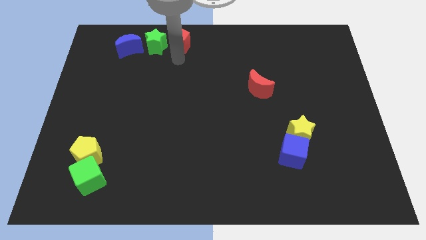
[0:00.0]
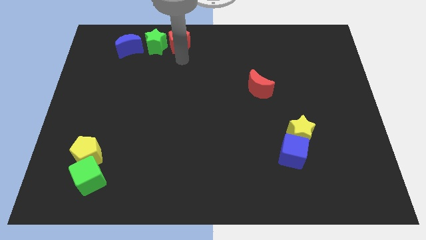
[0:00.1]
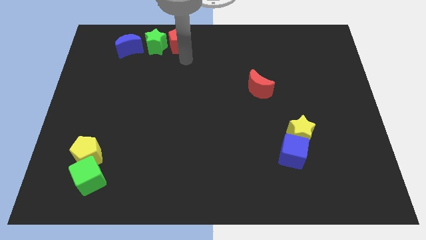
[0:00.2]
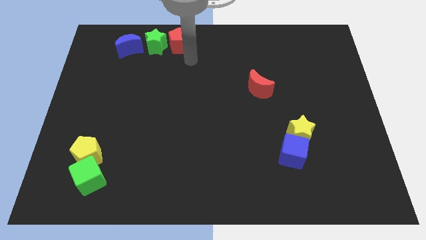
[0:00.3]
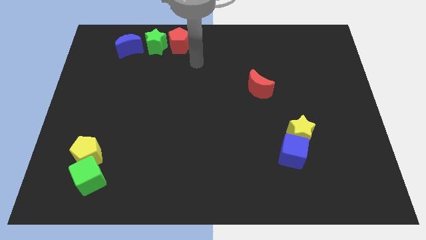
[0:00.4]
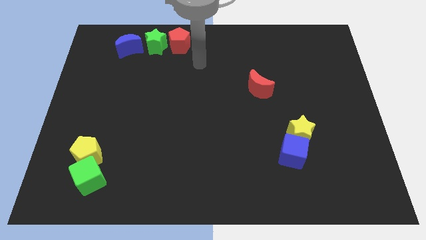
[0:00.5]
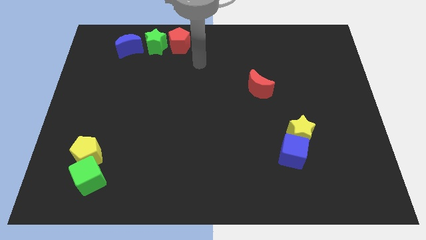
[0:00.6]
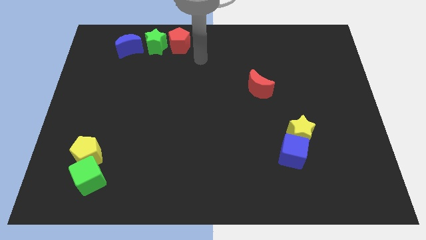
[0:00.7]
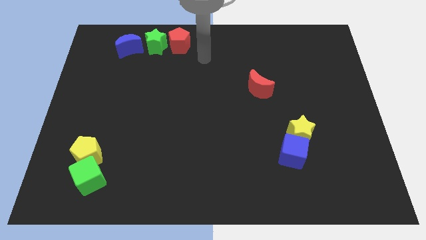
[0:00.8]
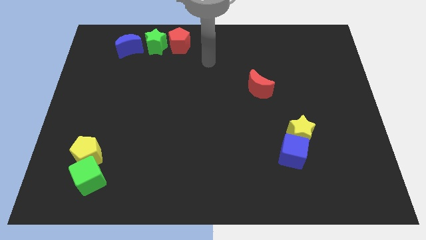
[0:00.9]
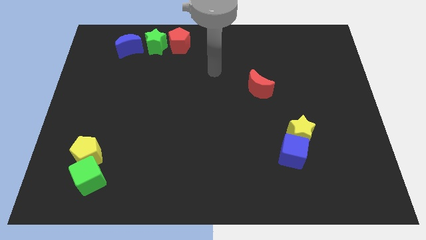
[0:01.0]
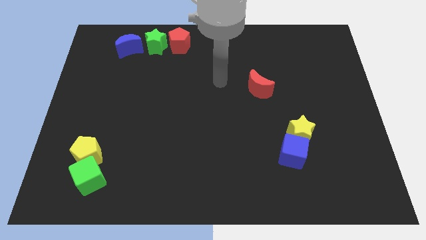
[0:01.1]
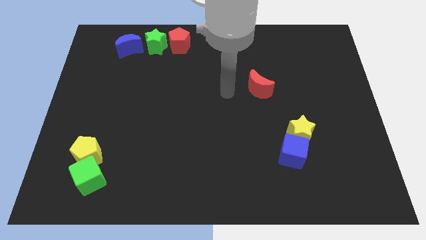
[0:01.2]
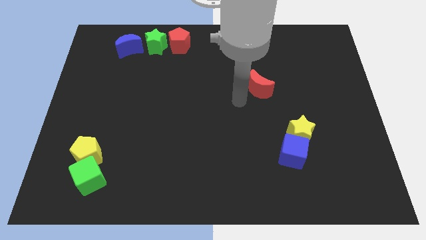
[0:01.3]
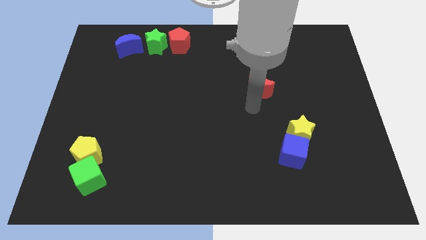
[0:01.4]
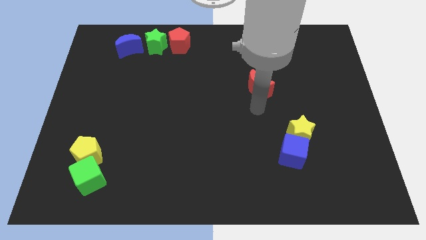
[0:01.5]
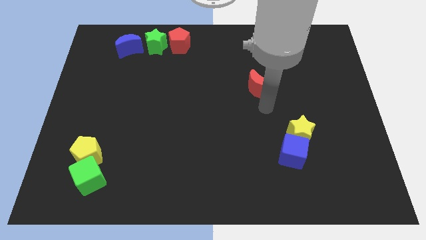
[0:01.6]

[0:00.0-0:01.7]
move your arm away from the red pentagon

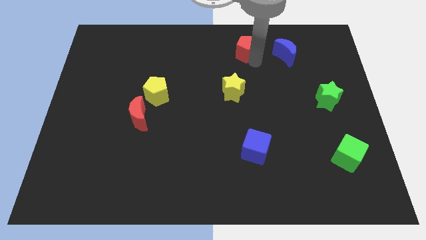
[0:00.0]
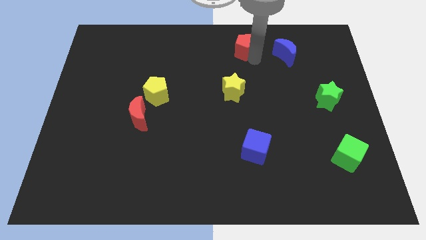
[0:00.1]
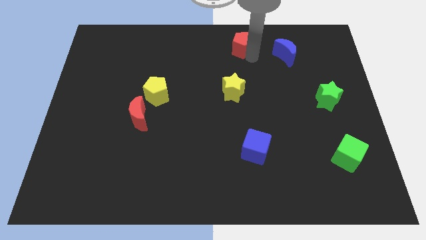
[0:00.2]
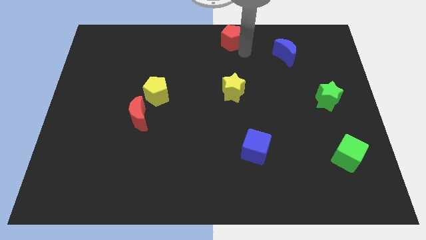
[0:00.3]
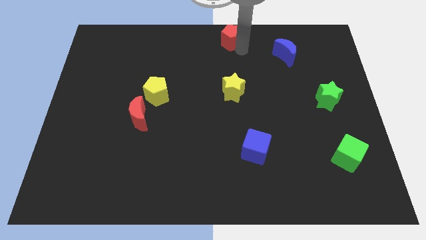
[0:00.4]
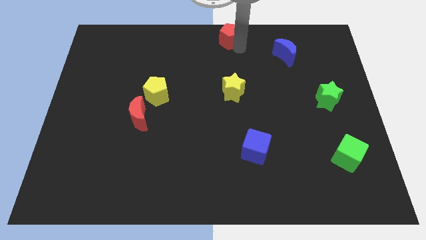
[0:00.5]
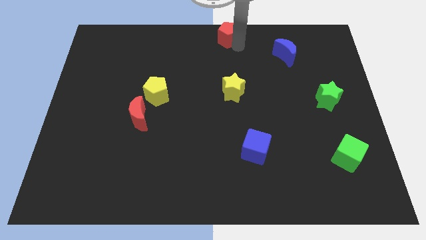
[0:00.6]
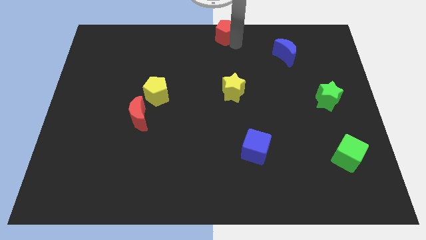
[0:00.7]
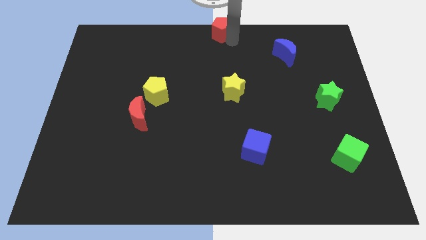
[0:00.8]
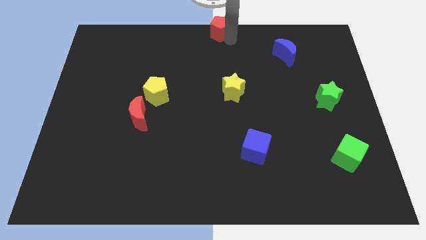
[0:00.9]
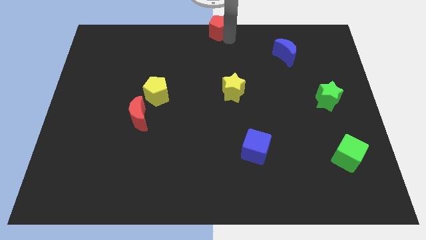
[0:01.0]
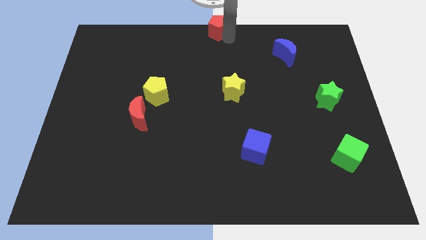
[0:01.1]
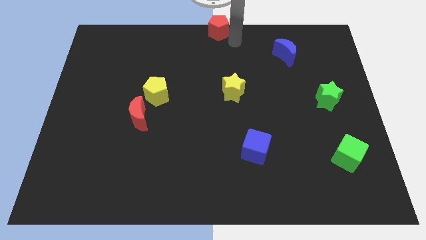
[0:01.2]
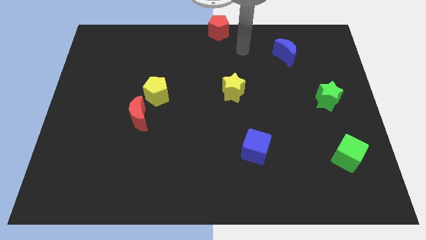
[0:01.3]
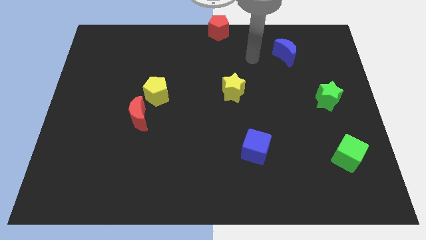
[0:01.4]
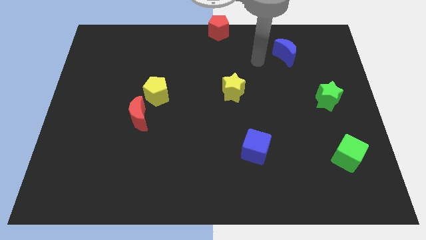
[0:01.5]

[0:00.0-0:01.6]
place the red pentagon to the top center of the board

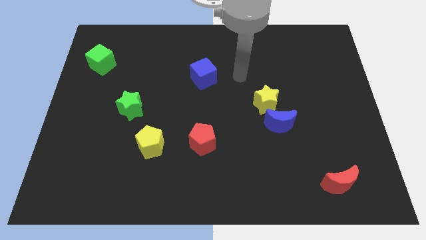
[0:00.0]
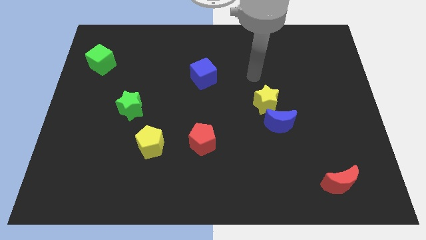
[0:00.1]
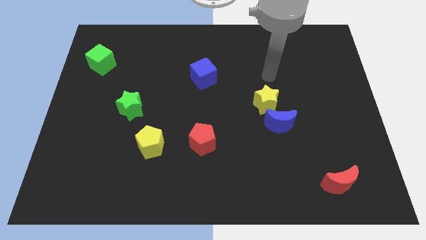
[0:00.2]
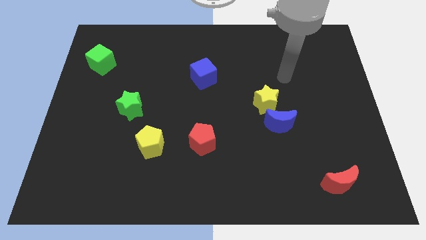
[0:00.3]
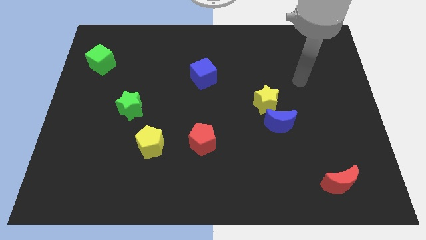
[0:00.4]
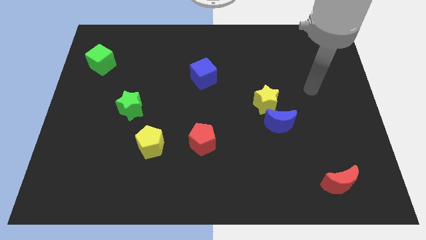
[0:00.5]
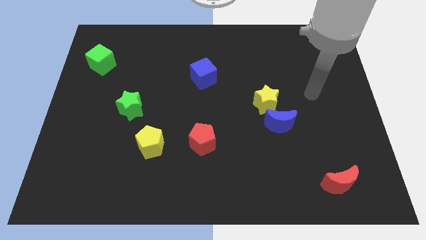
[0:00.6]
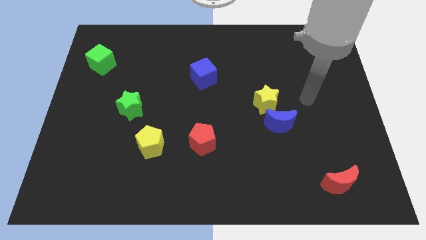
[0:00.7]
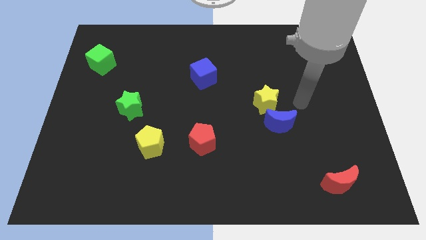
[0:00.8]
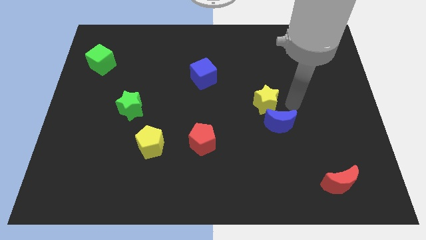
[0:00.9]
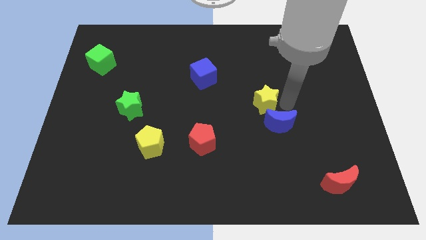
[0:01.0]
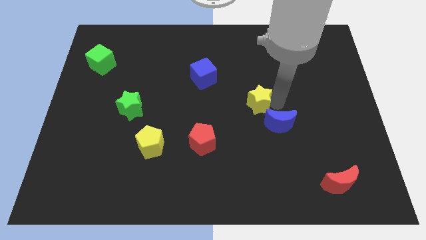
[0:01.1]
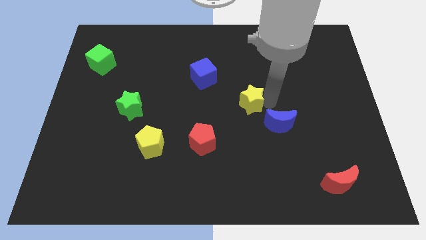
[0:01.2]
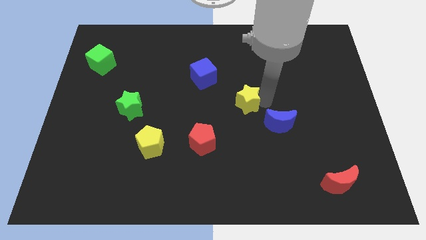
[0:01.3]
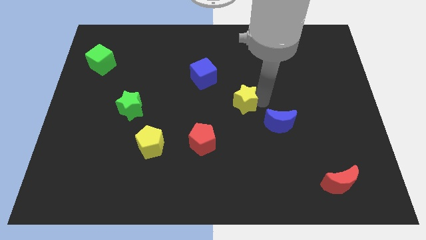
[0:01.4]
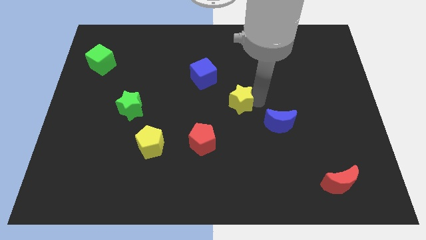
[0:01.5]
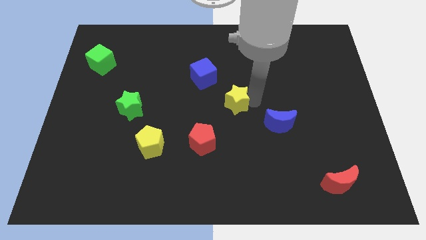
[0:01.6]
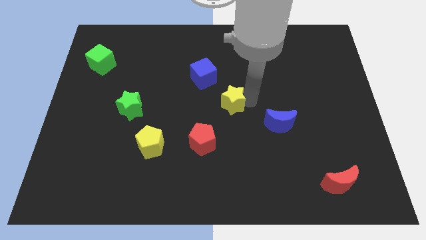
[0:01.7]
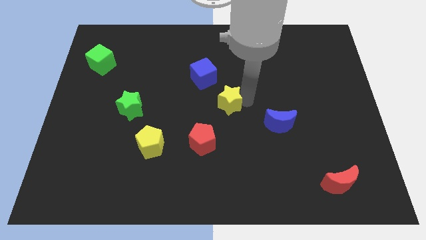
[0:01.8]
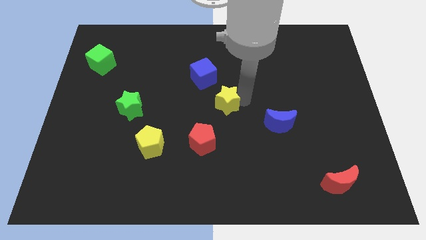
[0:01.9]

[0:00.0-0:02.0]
move the yellow star slightly to the center of the board

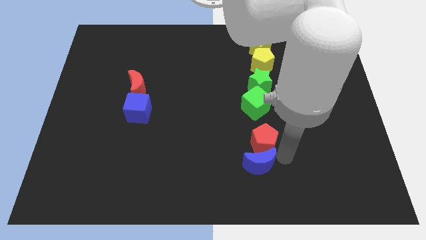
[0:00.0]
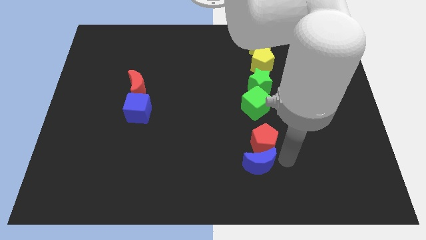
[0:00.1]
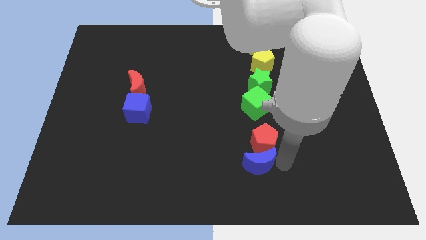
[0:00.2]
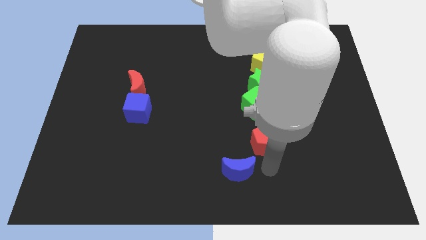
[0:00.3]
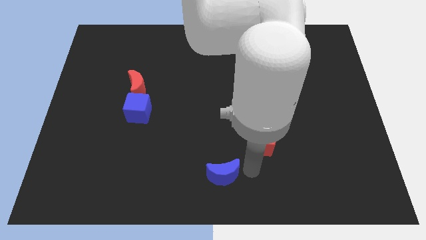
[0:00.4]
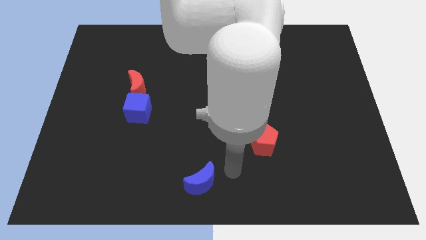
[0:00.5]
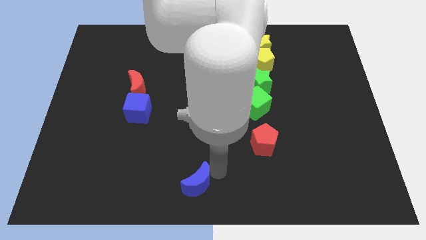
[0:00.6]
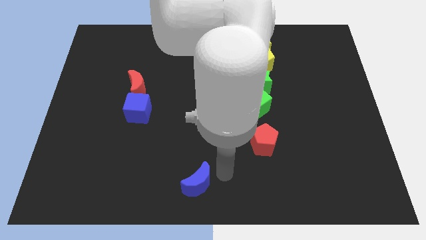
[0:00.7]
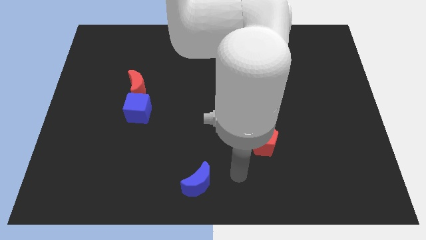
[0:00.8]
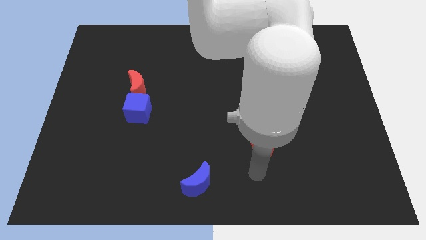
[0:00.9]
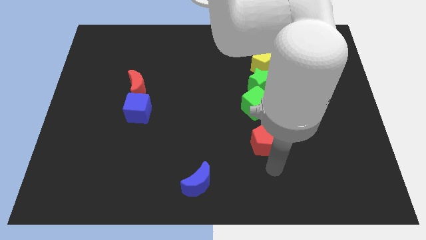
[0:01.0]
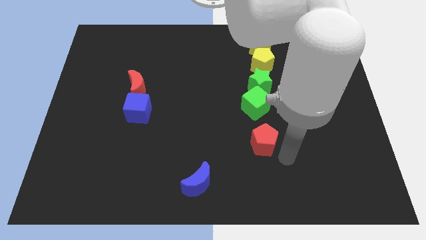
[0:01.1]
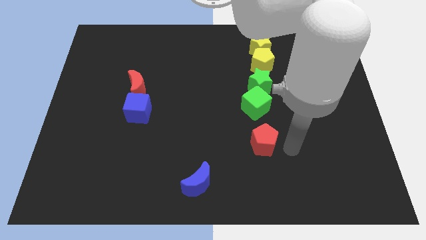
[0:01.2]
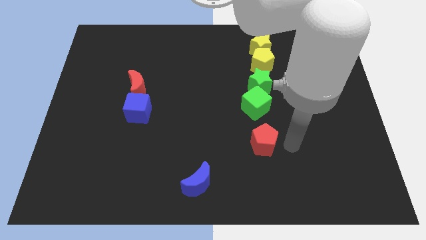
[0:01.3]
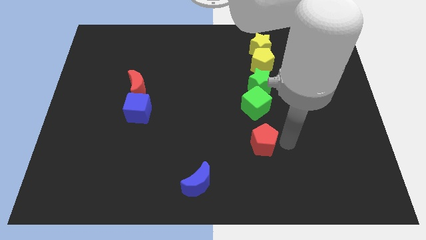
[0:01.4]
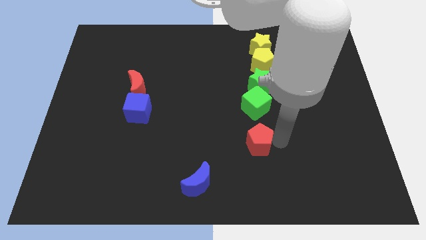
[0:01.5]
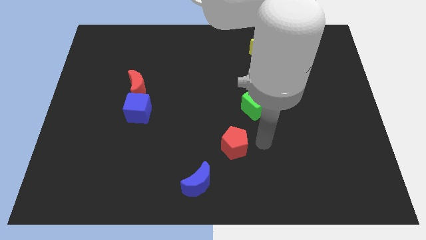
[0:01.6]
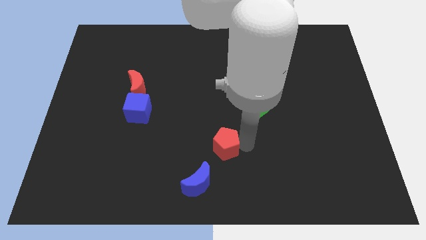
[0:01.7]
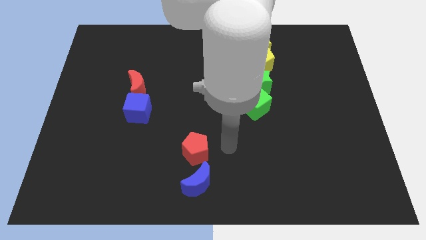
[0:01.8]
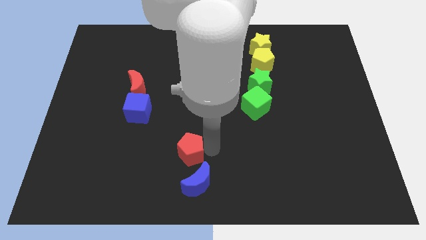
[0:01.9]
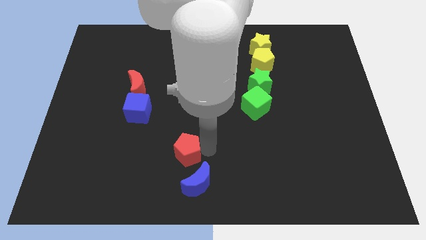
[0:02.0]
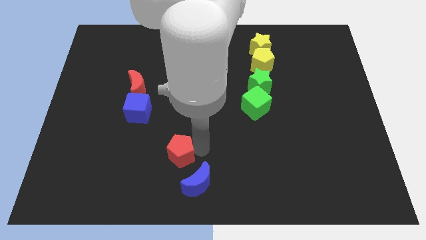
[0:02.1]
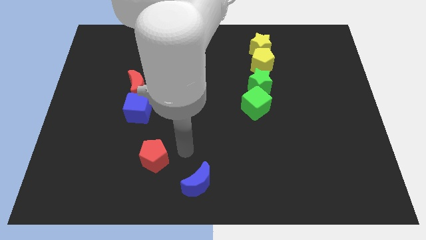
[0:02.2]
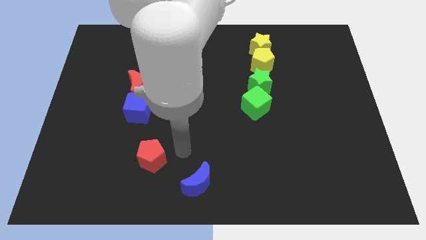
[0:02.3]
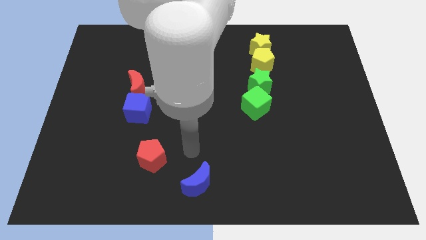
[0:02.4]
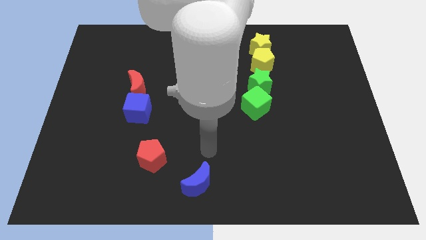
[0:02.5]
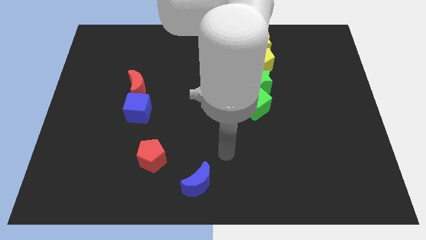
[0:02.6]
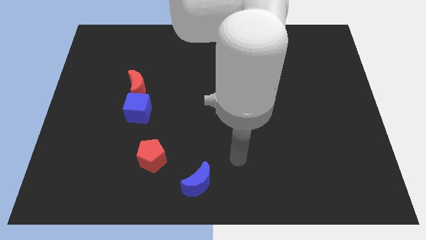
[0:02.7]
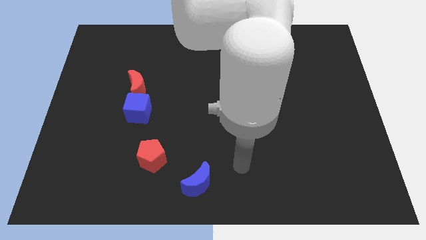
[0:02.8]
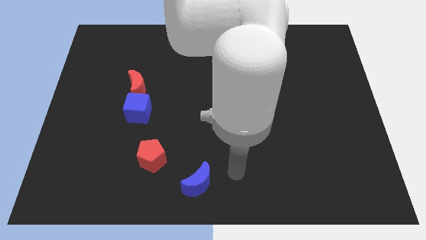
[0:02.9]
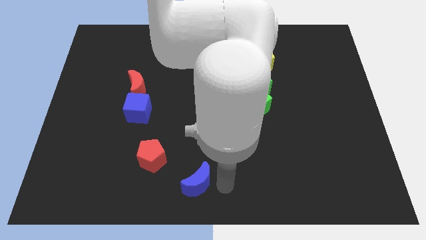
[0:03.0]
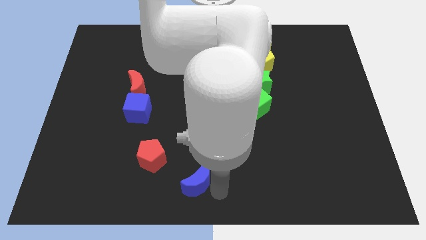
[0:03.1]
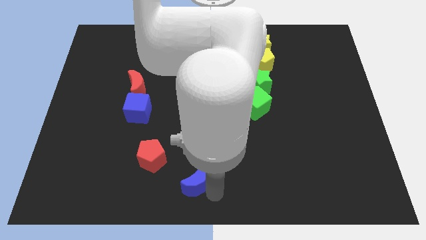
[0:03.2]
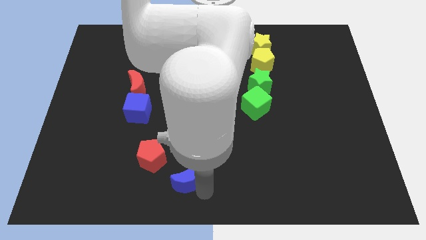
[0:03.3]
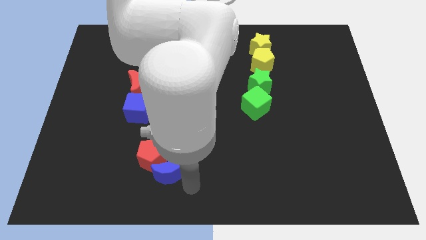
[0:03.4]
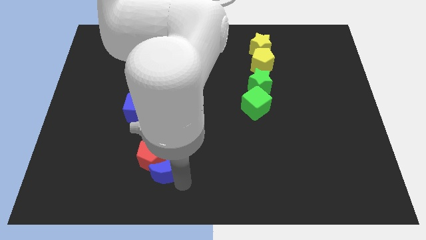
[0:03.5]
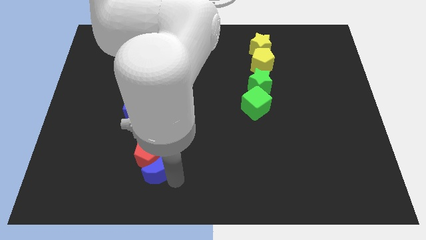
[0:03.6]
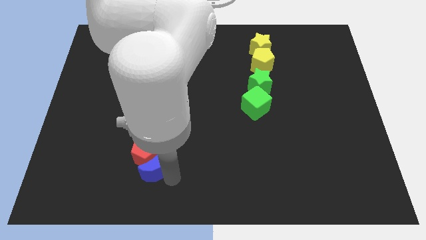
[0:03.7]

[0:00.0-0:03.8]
push the blue crescent into red pentagon
